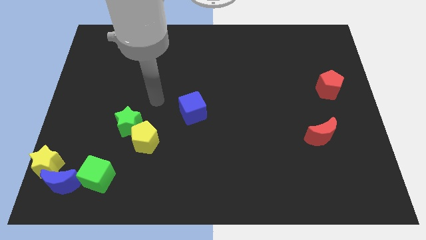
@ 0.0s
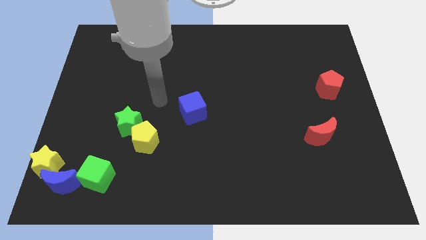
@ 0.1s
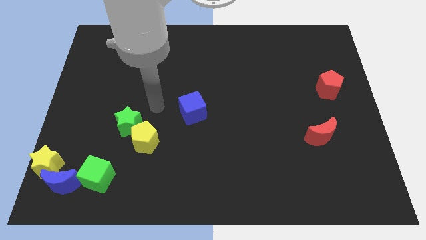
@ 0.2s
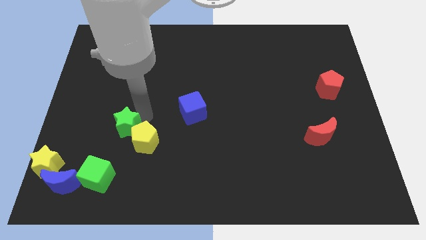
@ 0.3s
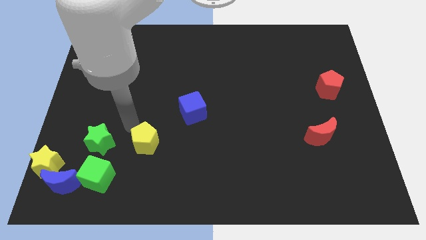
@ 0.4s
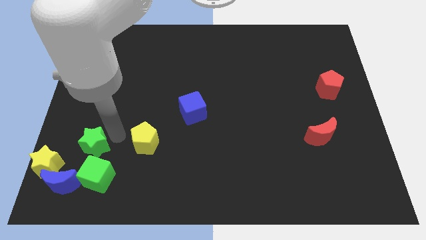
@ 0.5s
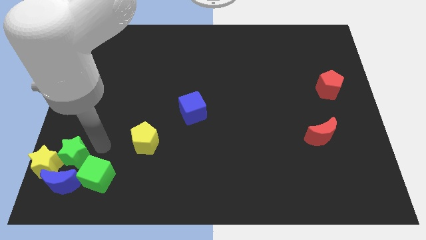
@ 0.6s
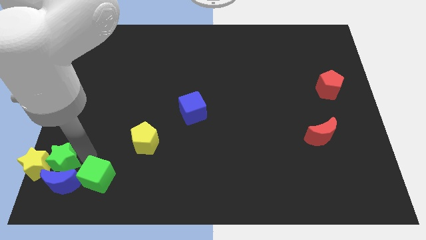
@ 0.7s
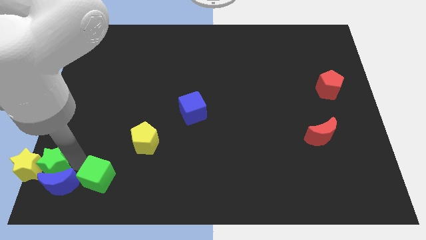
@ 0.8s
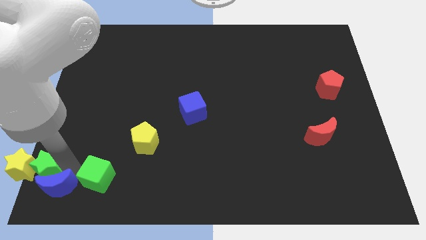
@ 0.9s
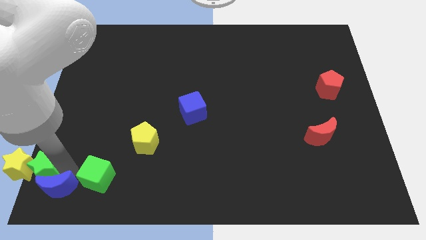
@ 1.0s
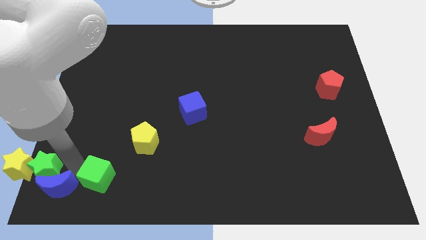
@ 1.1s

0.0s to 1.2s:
move the green star away from the yellow pentagon

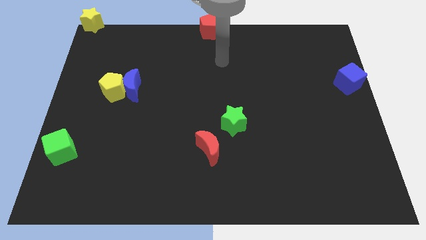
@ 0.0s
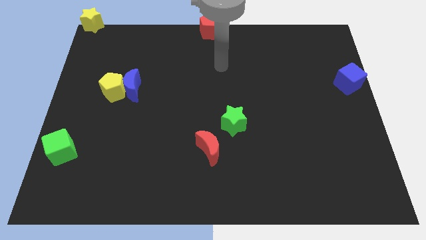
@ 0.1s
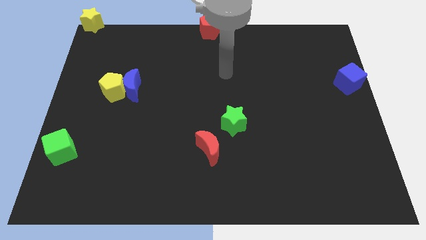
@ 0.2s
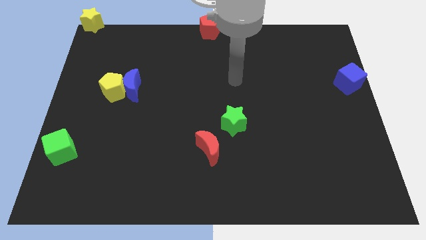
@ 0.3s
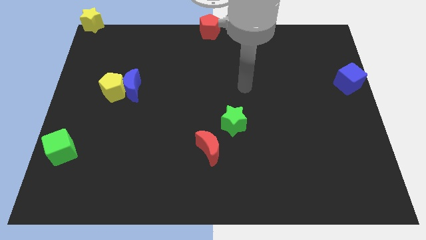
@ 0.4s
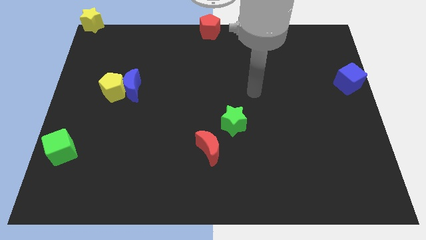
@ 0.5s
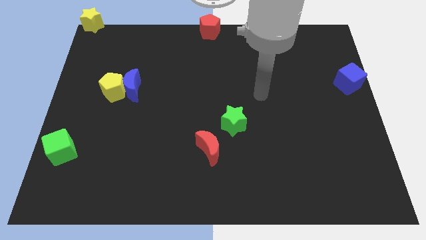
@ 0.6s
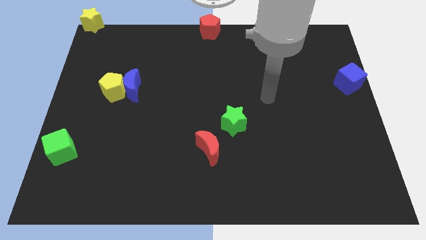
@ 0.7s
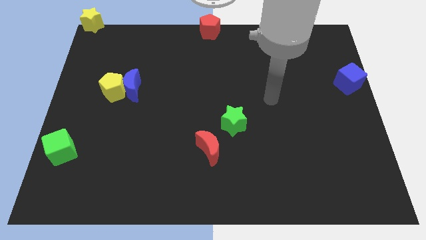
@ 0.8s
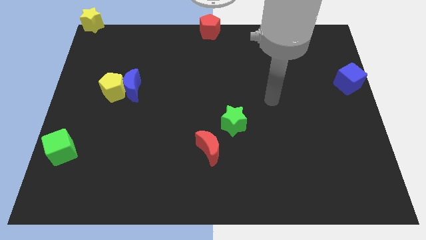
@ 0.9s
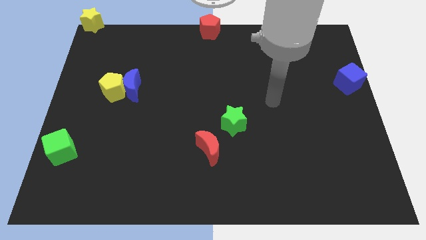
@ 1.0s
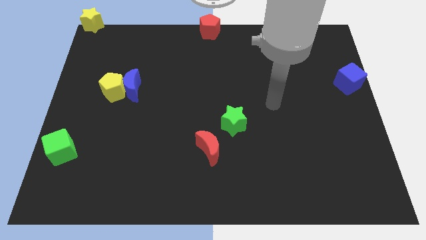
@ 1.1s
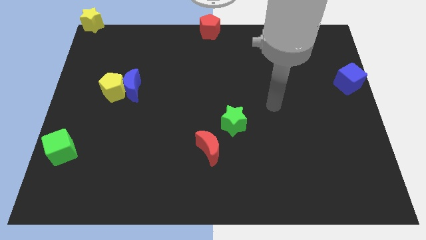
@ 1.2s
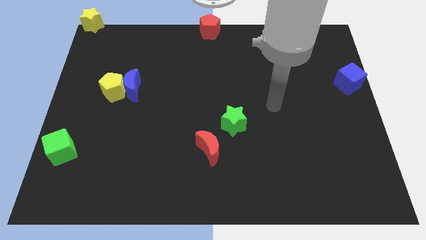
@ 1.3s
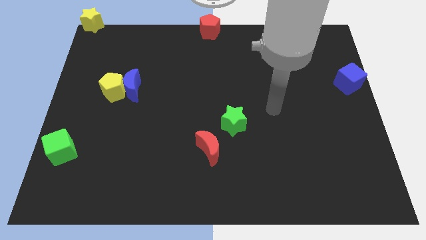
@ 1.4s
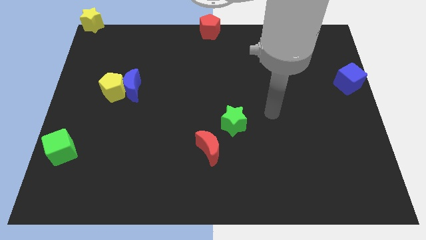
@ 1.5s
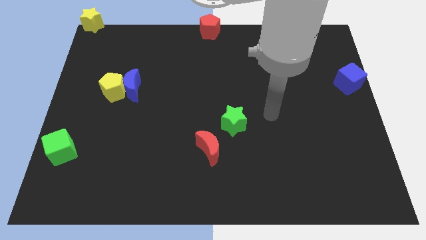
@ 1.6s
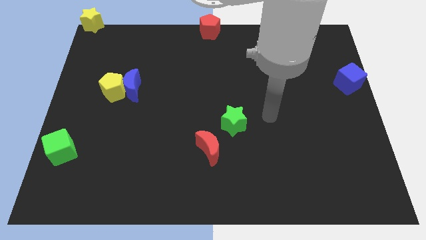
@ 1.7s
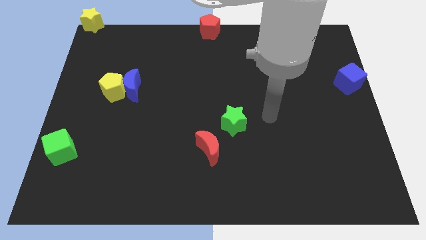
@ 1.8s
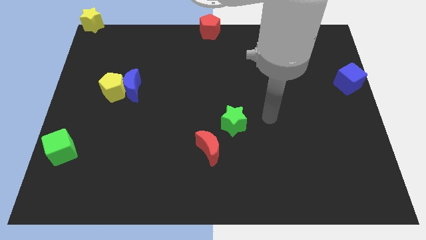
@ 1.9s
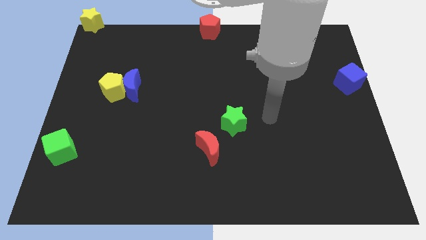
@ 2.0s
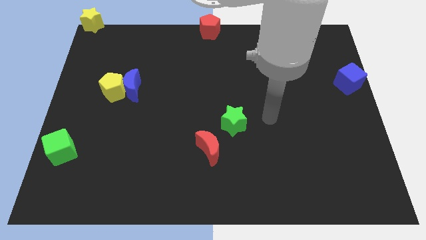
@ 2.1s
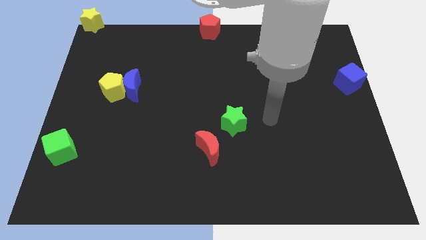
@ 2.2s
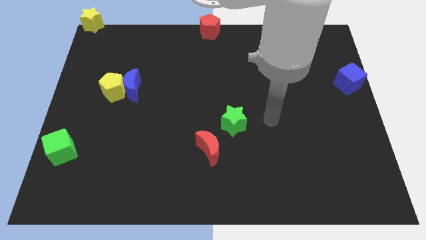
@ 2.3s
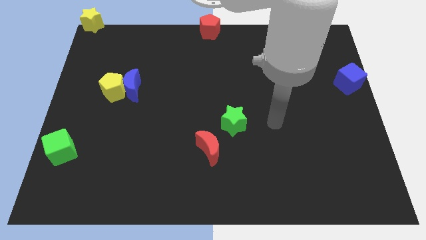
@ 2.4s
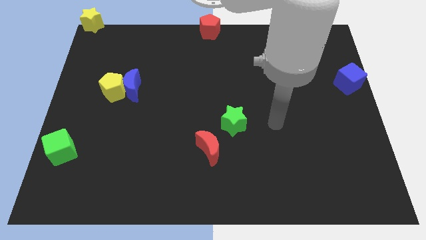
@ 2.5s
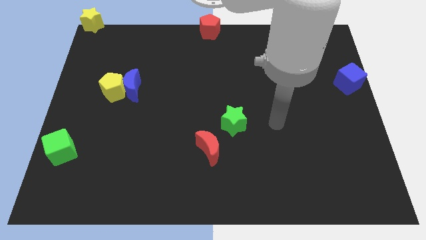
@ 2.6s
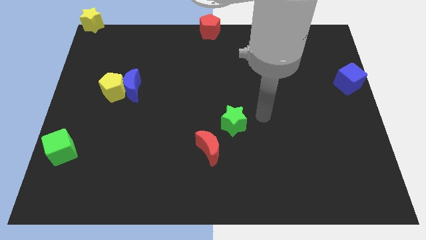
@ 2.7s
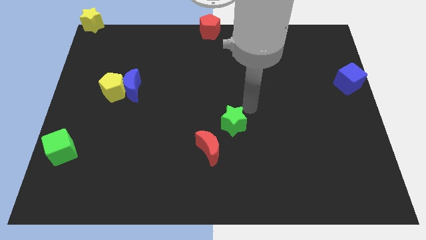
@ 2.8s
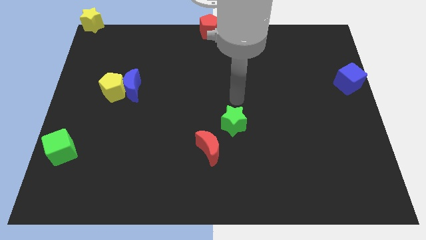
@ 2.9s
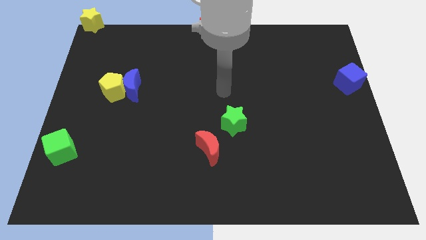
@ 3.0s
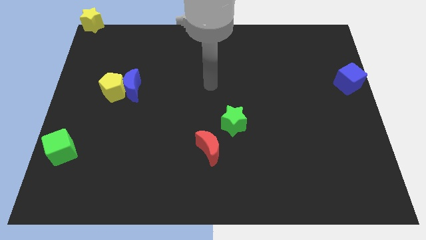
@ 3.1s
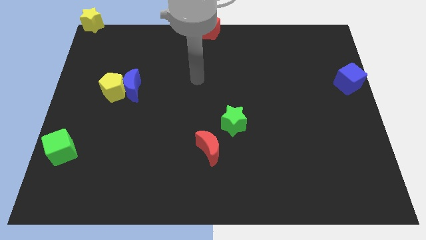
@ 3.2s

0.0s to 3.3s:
place your arm towards the center of the board

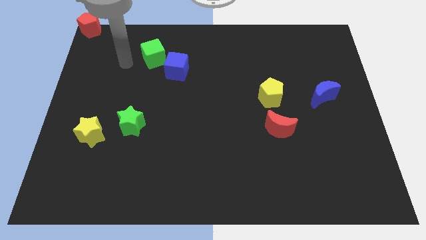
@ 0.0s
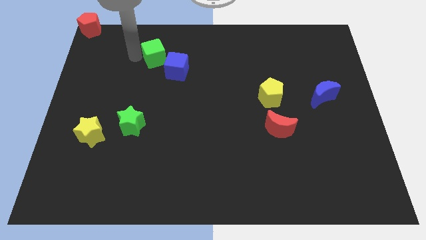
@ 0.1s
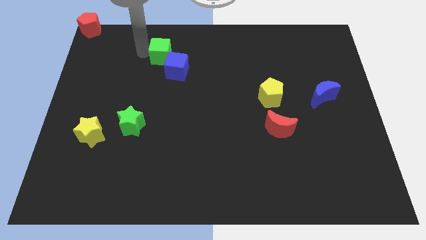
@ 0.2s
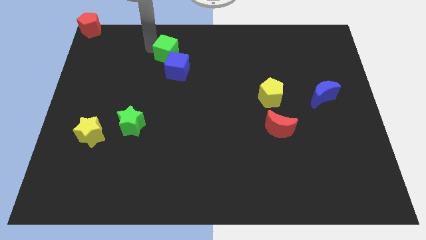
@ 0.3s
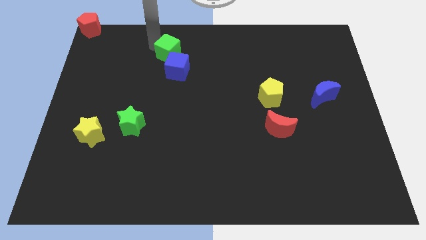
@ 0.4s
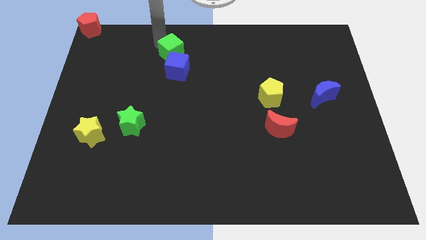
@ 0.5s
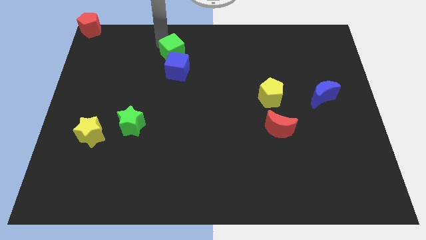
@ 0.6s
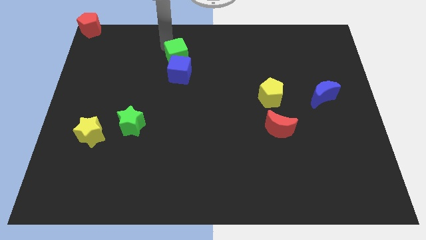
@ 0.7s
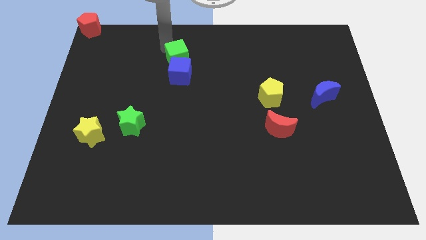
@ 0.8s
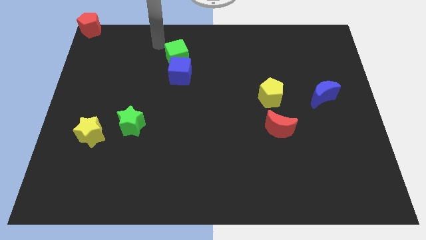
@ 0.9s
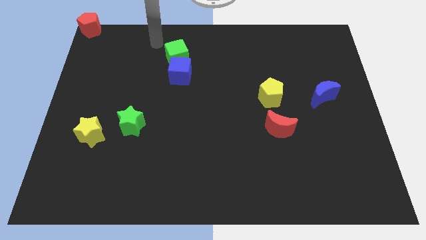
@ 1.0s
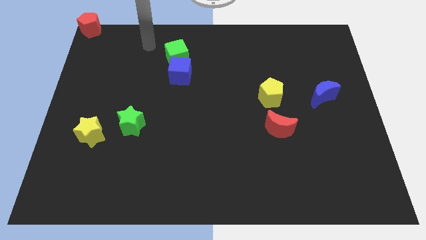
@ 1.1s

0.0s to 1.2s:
slide green cube on top of blue cube

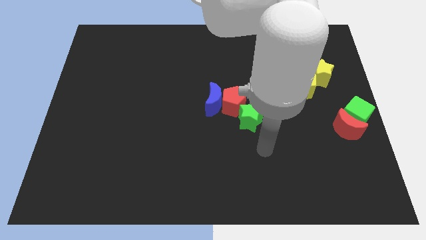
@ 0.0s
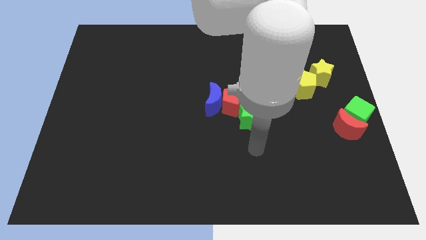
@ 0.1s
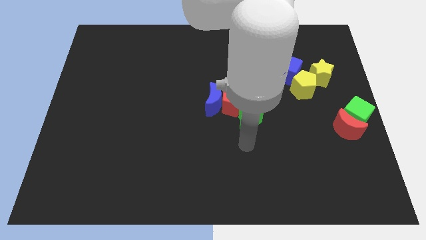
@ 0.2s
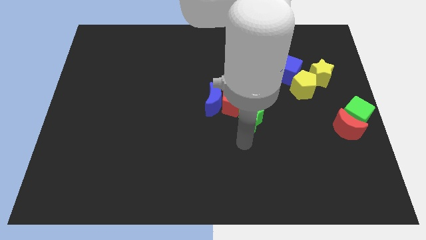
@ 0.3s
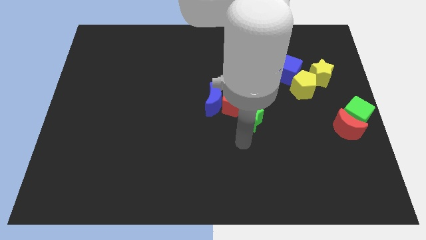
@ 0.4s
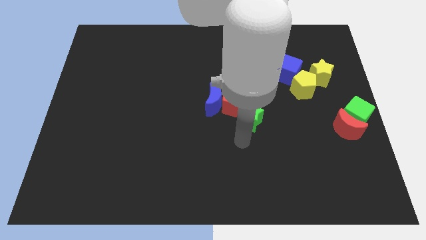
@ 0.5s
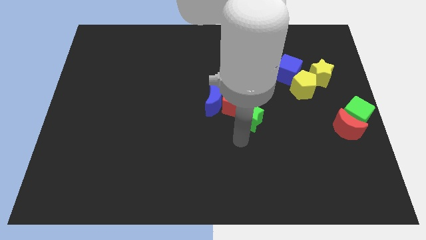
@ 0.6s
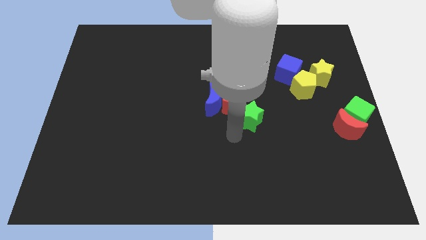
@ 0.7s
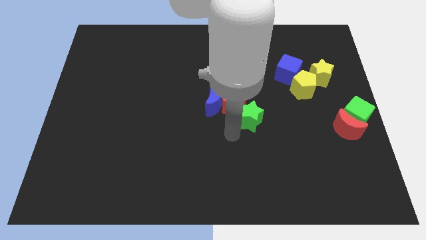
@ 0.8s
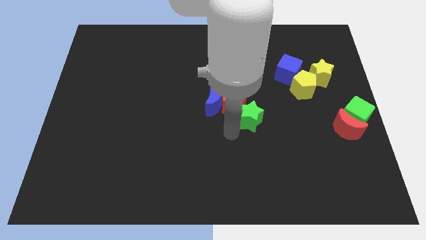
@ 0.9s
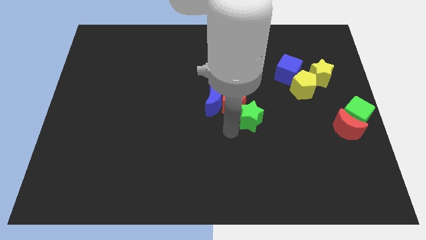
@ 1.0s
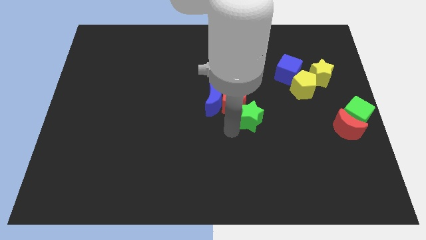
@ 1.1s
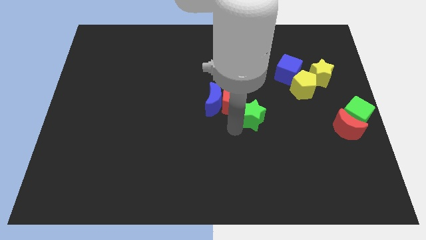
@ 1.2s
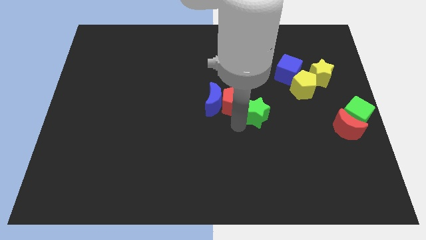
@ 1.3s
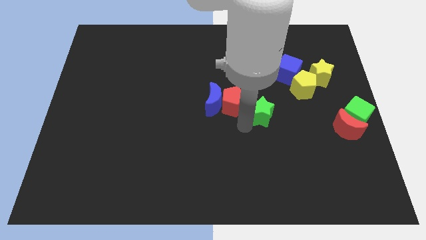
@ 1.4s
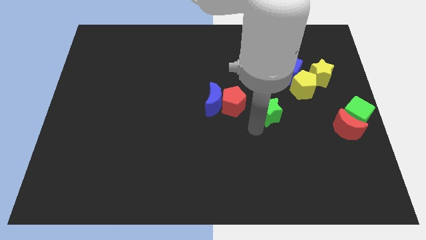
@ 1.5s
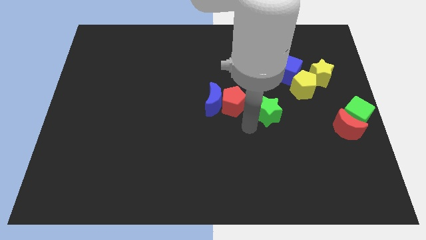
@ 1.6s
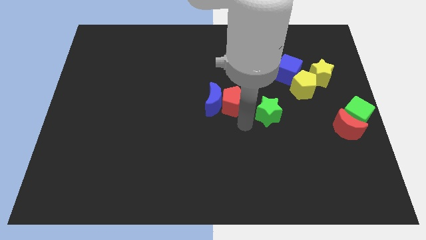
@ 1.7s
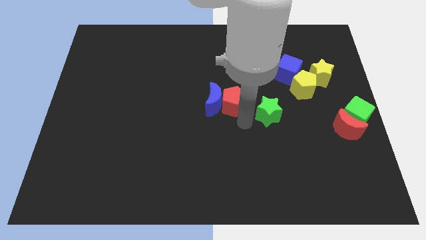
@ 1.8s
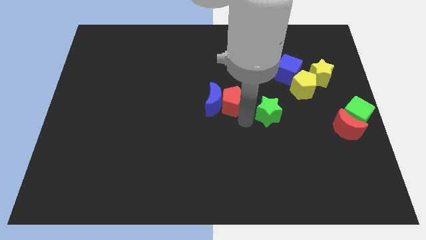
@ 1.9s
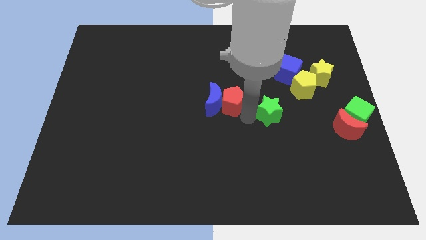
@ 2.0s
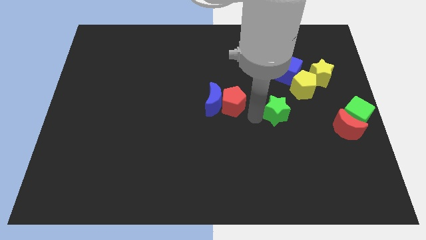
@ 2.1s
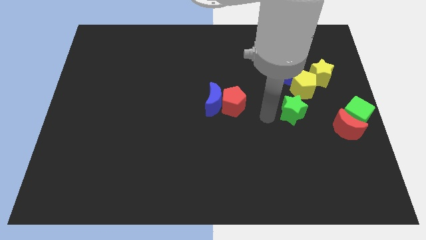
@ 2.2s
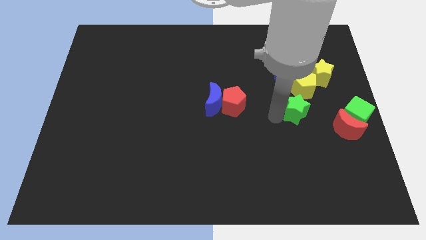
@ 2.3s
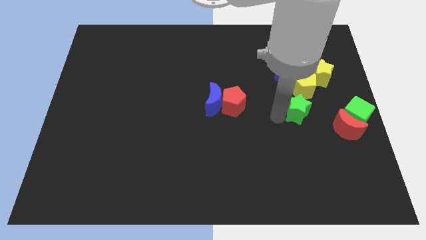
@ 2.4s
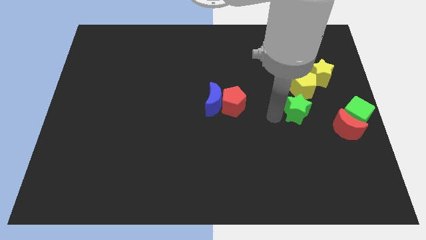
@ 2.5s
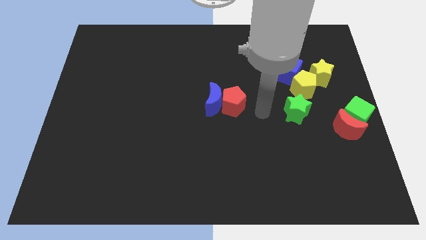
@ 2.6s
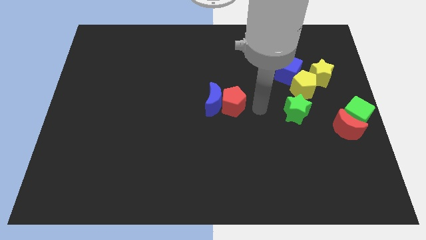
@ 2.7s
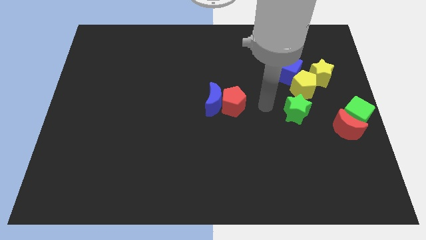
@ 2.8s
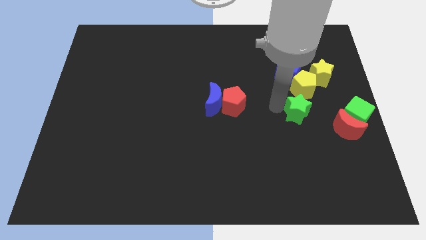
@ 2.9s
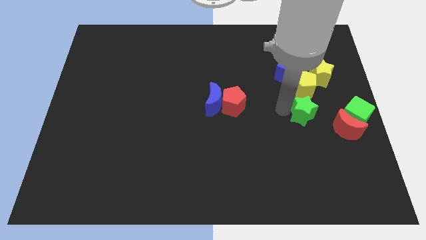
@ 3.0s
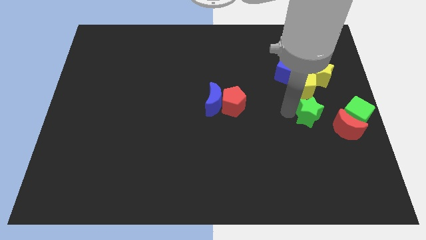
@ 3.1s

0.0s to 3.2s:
push green star below yellow pentagon
